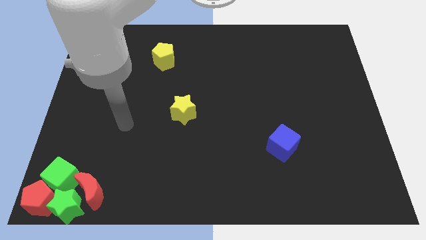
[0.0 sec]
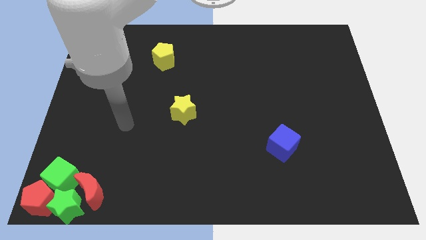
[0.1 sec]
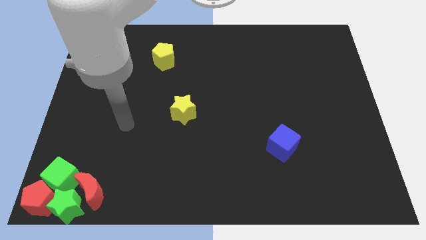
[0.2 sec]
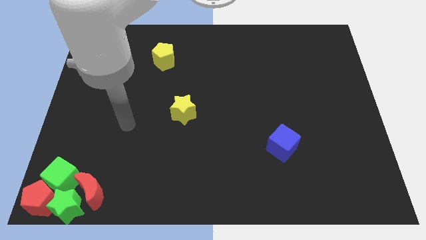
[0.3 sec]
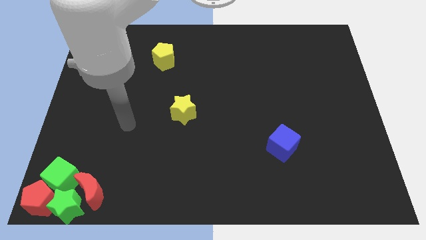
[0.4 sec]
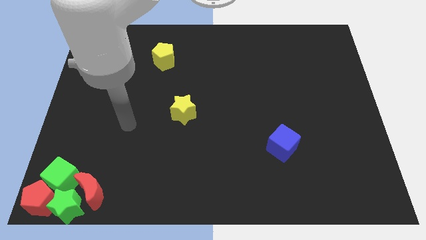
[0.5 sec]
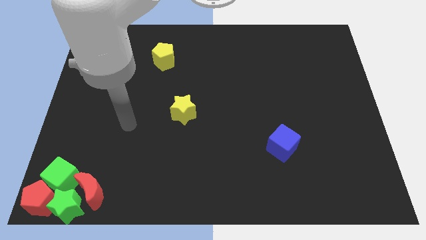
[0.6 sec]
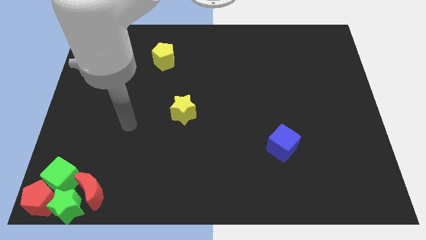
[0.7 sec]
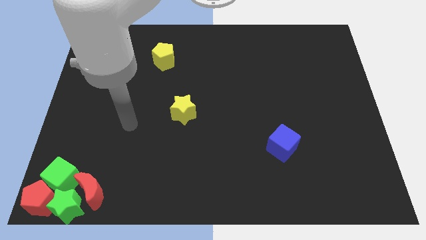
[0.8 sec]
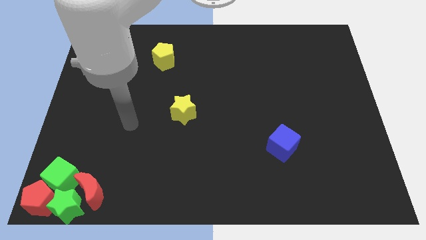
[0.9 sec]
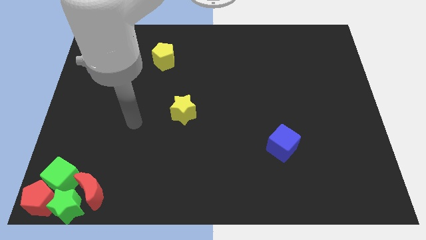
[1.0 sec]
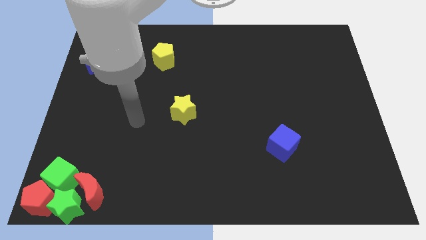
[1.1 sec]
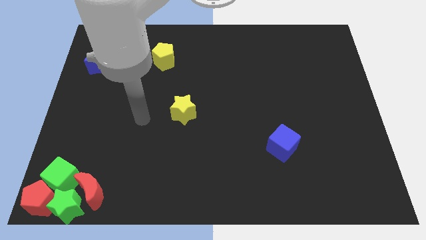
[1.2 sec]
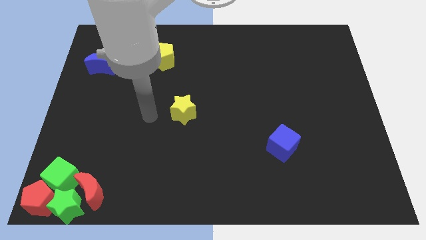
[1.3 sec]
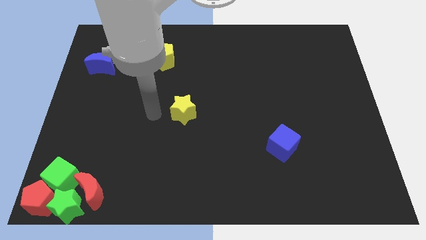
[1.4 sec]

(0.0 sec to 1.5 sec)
move the arm to the yellow star

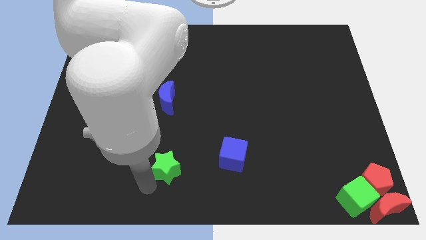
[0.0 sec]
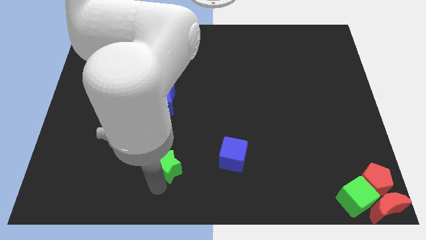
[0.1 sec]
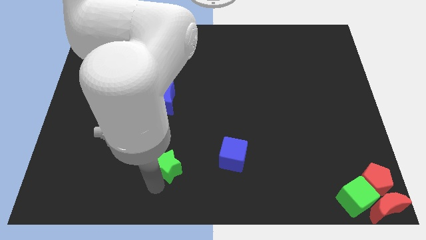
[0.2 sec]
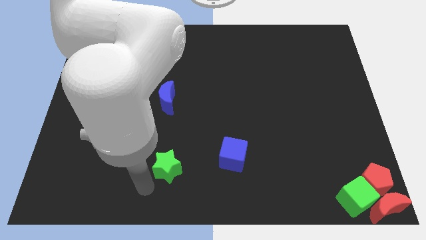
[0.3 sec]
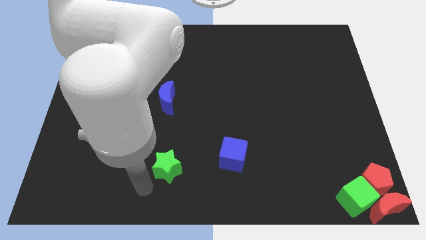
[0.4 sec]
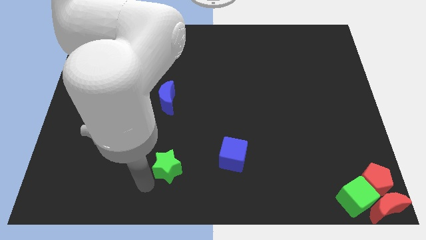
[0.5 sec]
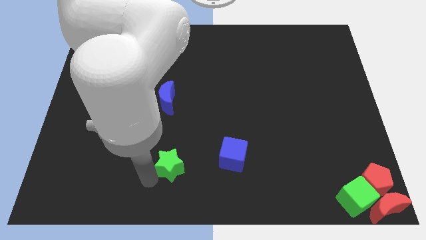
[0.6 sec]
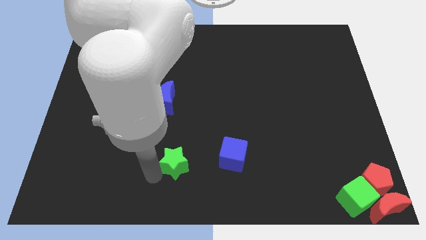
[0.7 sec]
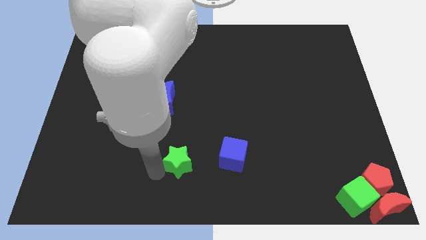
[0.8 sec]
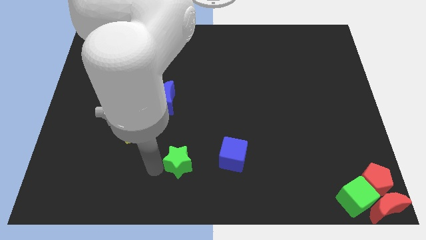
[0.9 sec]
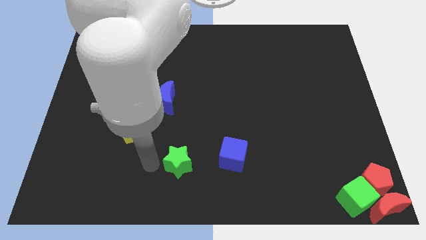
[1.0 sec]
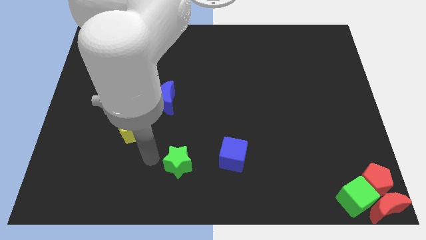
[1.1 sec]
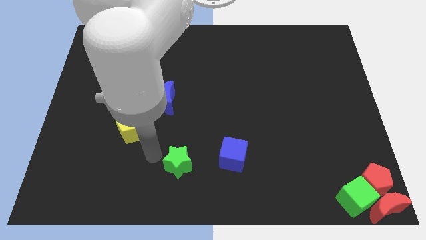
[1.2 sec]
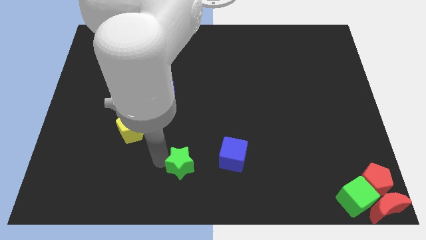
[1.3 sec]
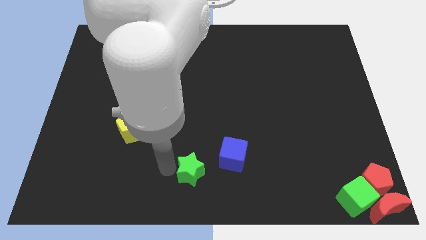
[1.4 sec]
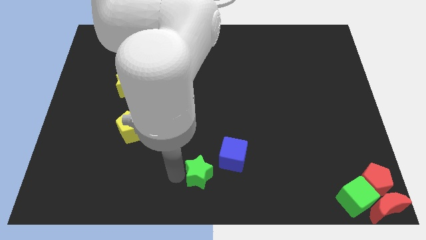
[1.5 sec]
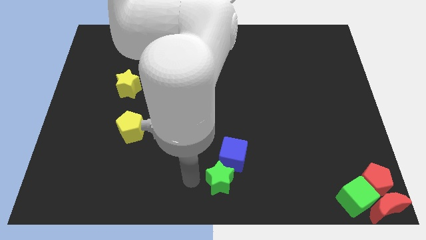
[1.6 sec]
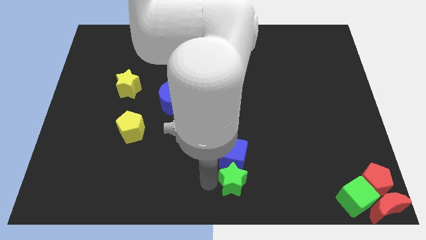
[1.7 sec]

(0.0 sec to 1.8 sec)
place the green star underneath the blue cube

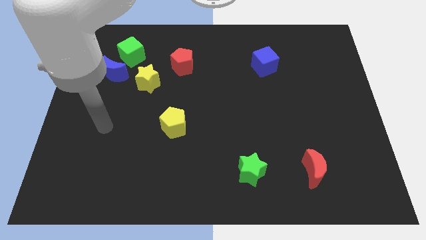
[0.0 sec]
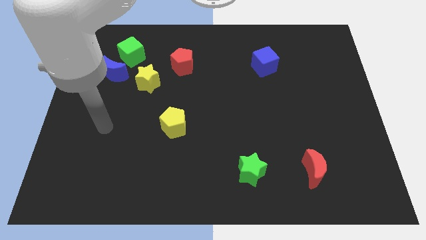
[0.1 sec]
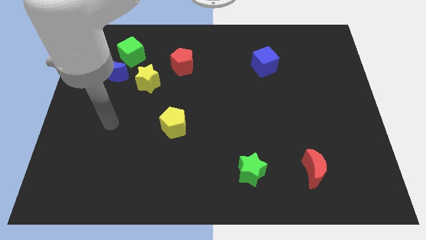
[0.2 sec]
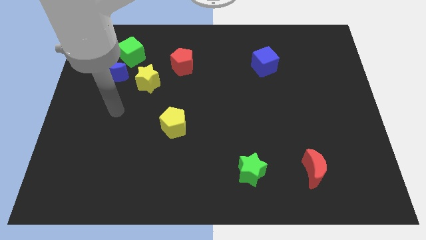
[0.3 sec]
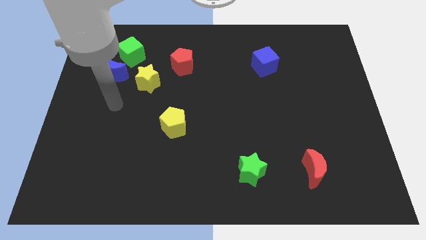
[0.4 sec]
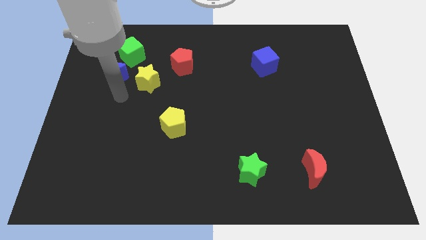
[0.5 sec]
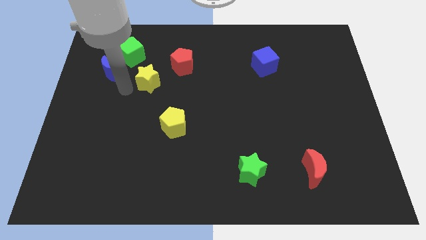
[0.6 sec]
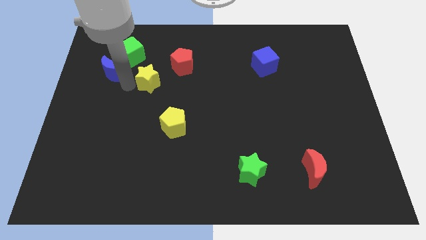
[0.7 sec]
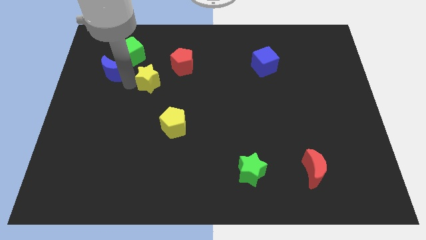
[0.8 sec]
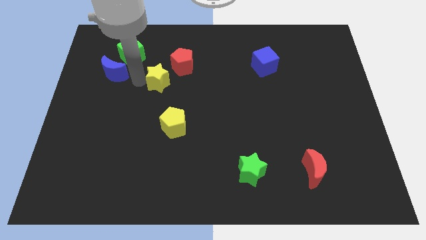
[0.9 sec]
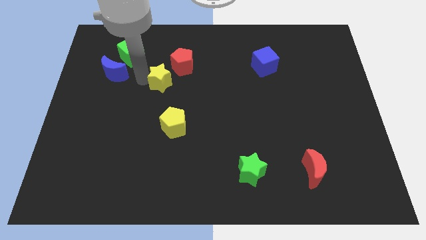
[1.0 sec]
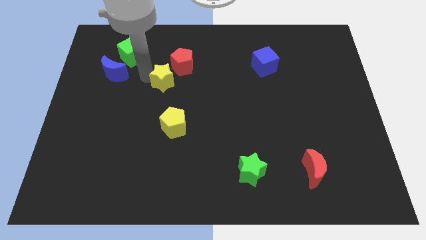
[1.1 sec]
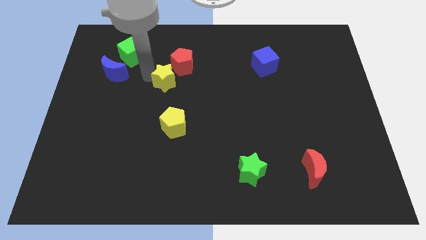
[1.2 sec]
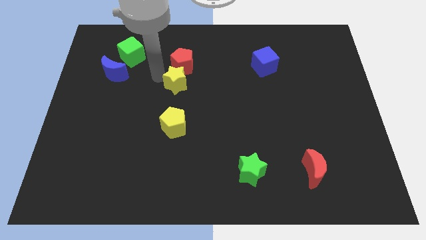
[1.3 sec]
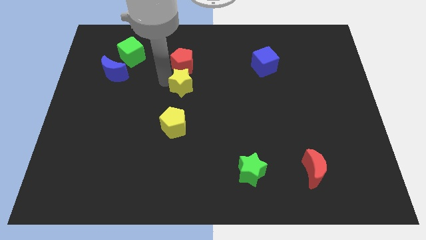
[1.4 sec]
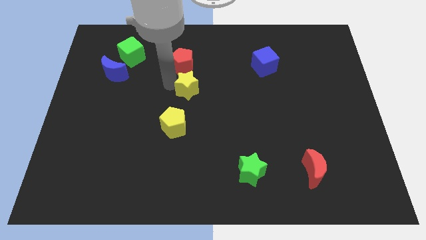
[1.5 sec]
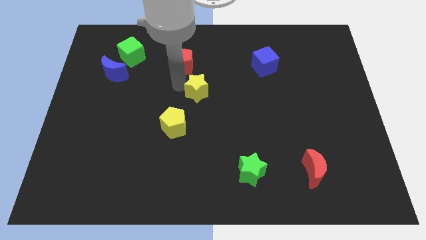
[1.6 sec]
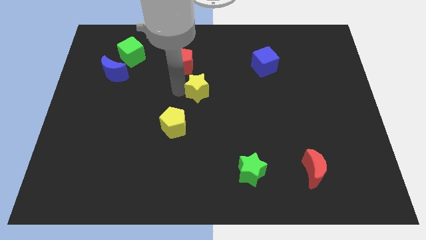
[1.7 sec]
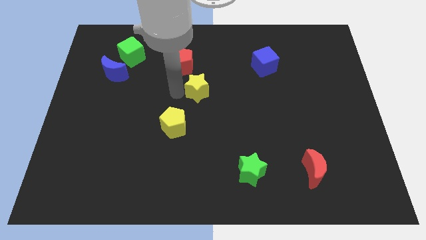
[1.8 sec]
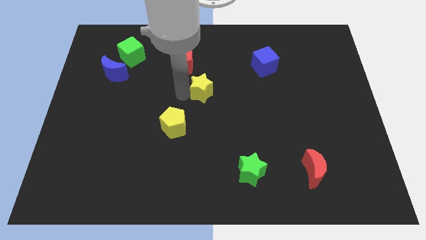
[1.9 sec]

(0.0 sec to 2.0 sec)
place a yellow star towards the center of the board

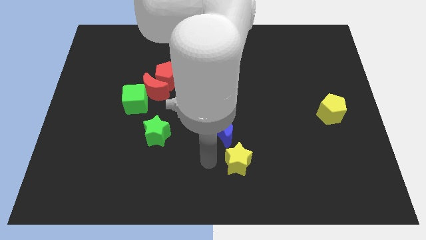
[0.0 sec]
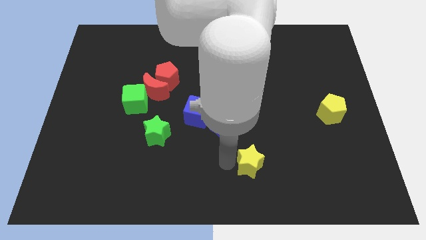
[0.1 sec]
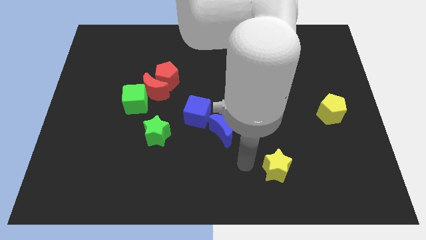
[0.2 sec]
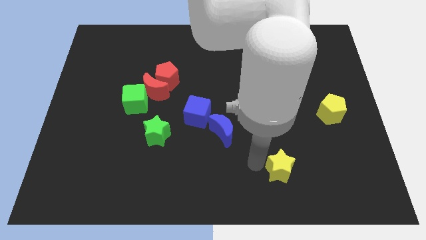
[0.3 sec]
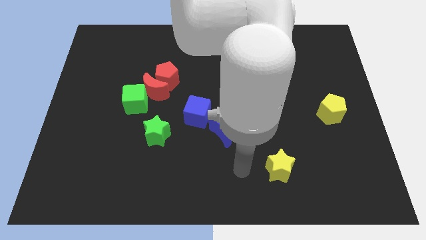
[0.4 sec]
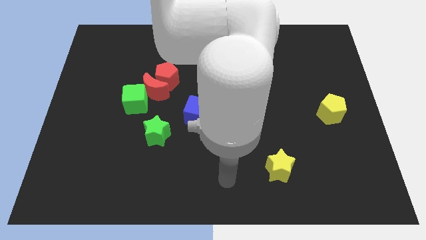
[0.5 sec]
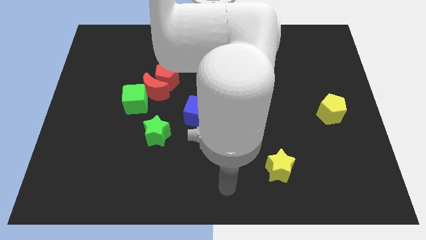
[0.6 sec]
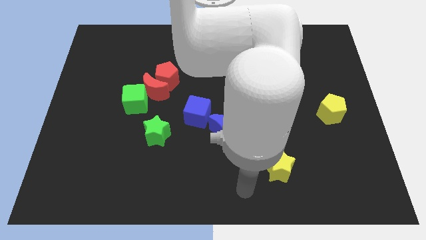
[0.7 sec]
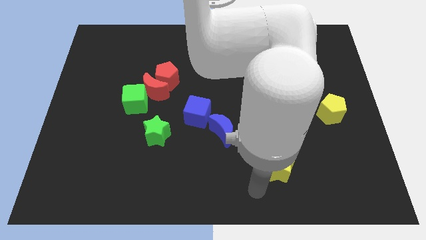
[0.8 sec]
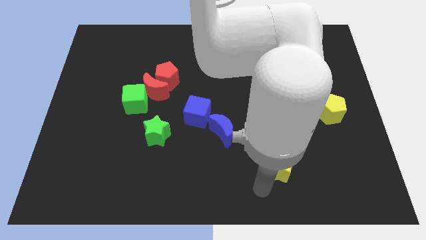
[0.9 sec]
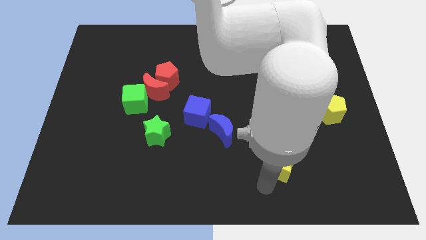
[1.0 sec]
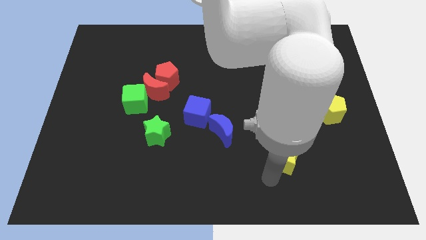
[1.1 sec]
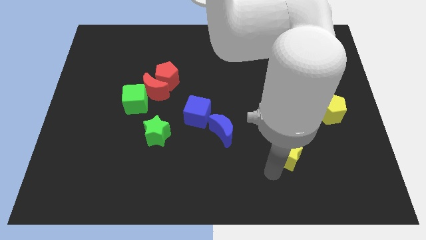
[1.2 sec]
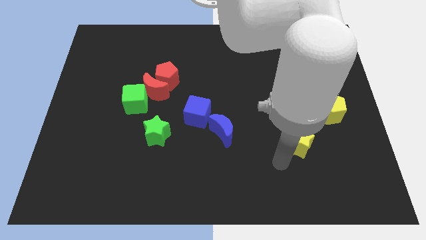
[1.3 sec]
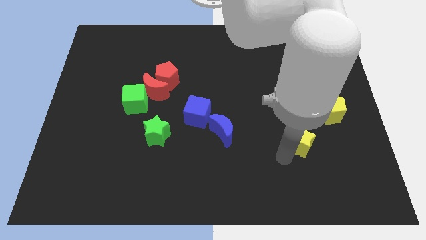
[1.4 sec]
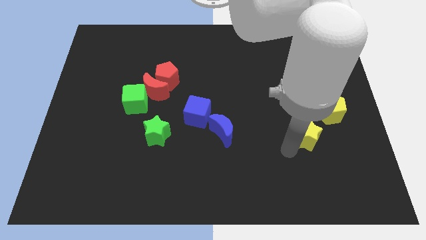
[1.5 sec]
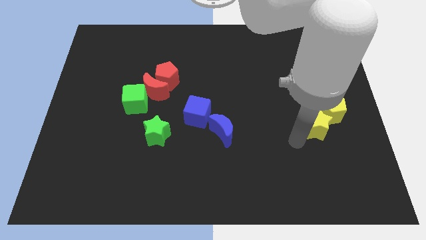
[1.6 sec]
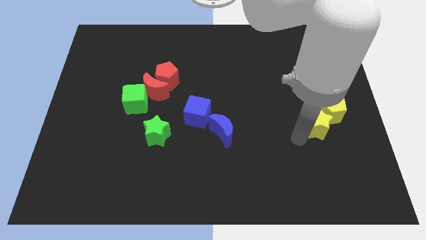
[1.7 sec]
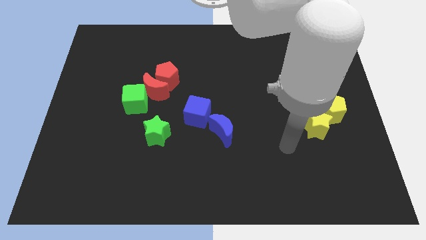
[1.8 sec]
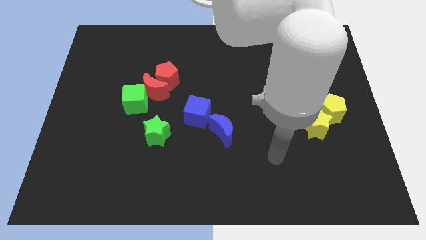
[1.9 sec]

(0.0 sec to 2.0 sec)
move yellow star into yellow pentagon

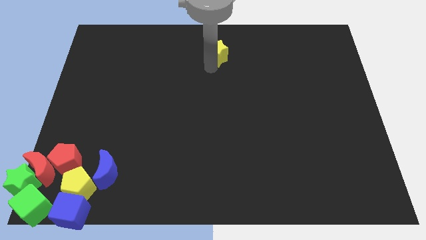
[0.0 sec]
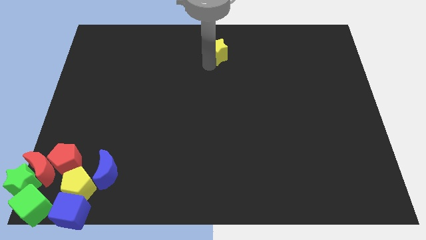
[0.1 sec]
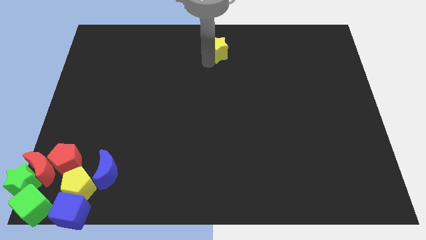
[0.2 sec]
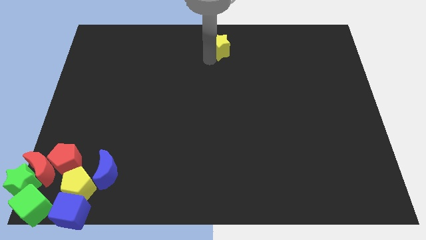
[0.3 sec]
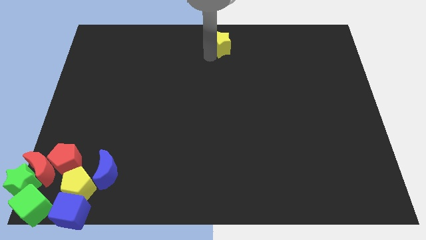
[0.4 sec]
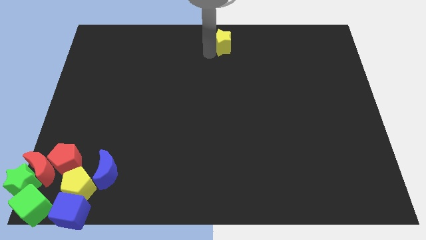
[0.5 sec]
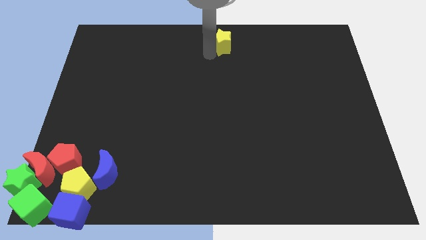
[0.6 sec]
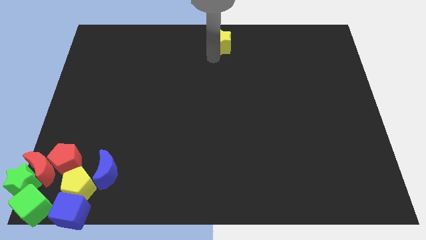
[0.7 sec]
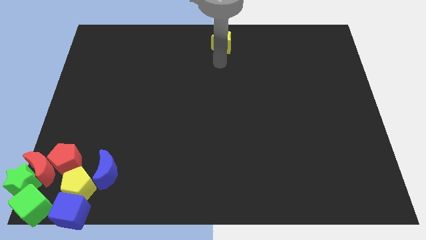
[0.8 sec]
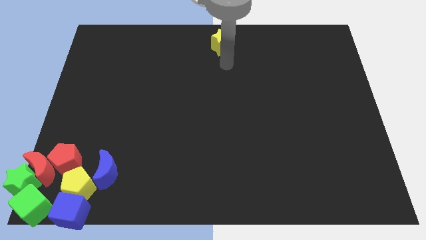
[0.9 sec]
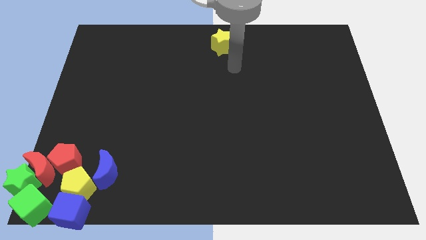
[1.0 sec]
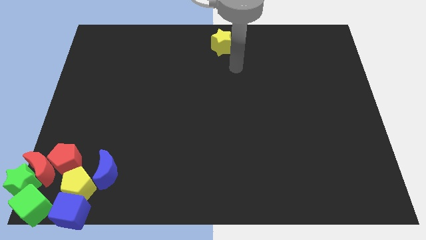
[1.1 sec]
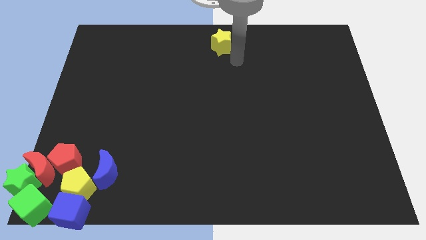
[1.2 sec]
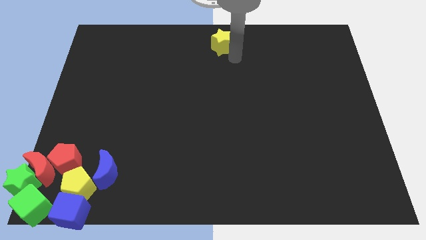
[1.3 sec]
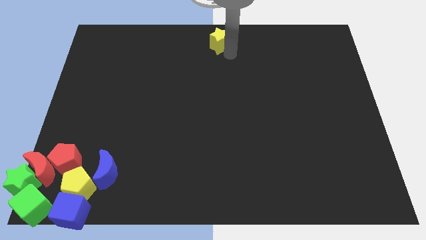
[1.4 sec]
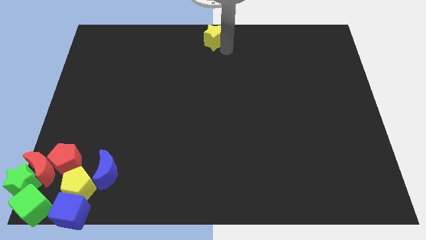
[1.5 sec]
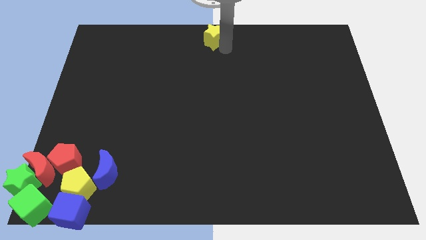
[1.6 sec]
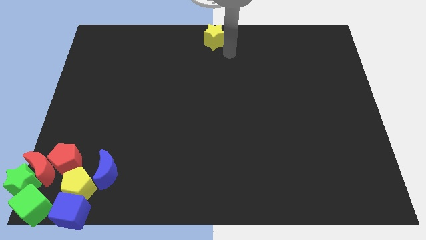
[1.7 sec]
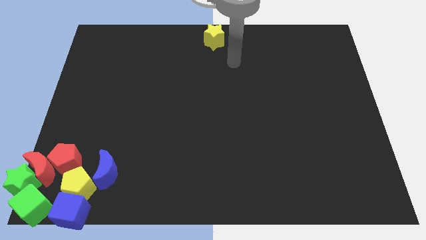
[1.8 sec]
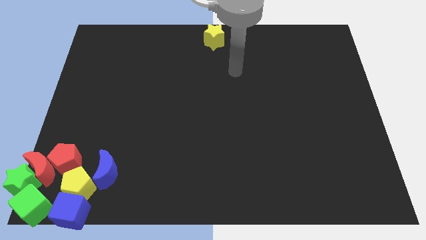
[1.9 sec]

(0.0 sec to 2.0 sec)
push yellow star towards top middle of the board
